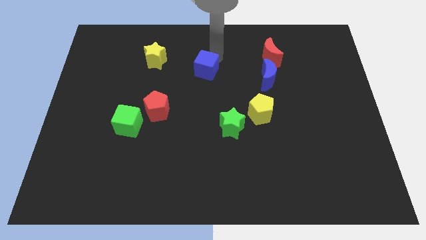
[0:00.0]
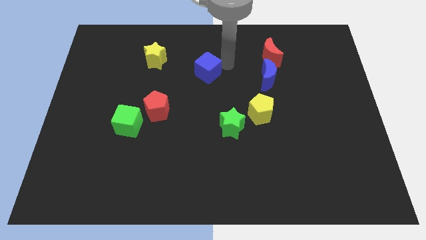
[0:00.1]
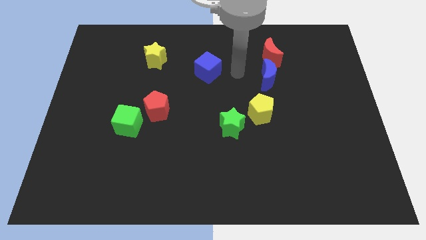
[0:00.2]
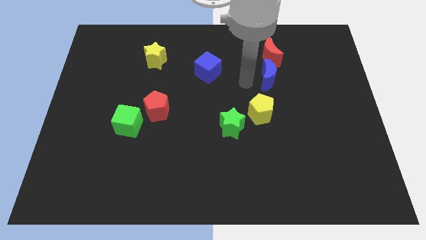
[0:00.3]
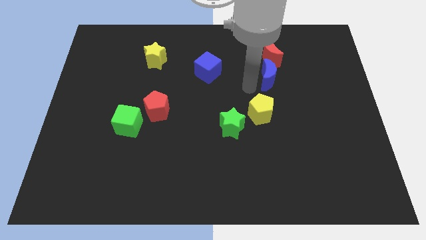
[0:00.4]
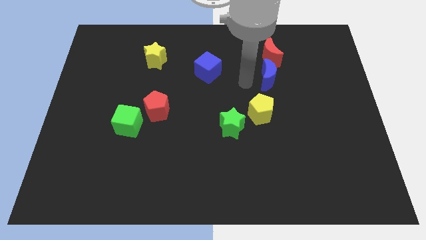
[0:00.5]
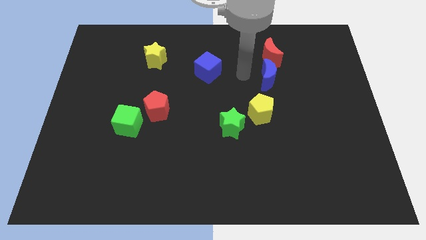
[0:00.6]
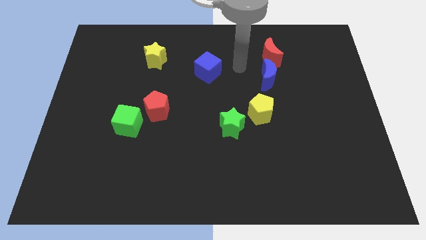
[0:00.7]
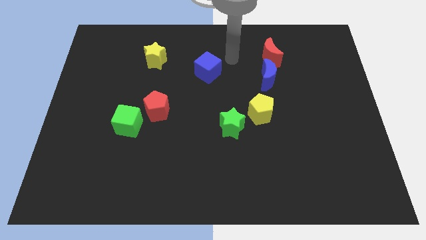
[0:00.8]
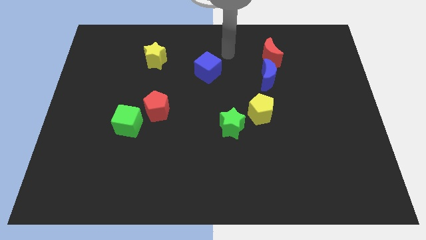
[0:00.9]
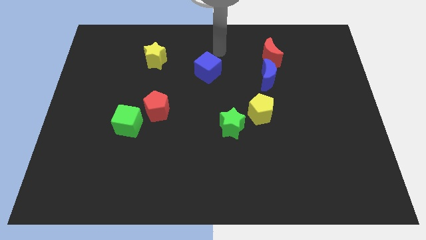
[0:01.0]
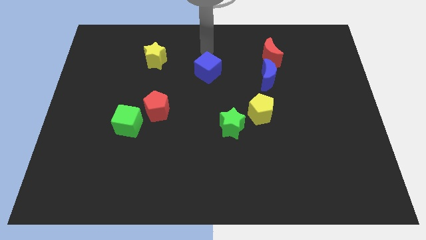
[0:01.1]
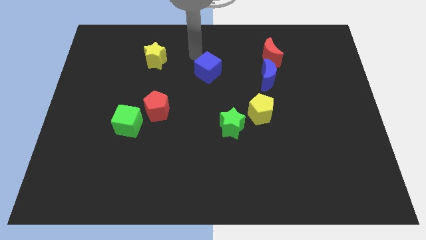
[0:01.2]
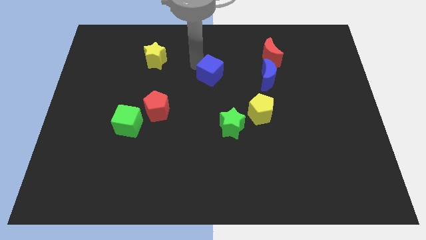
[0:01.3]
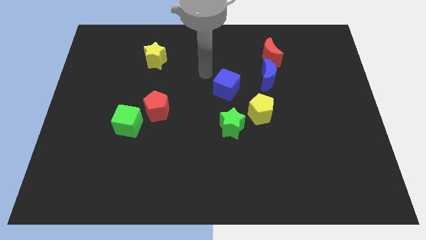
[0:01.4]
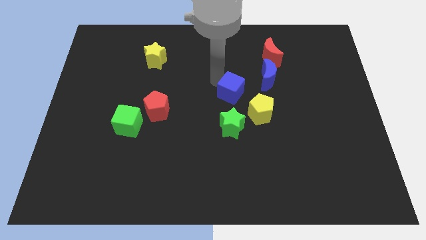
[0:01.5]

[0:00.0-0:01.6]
move the blue cube above the green star

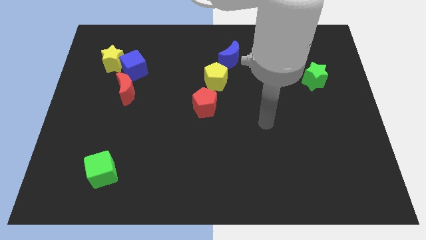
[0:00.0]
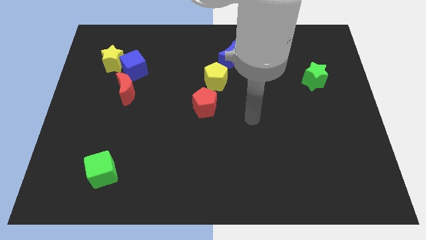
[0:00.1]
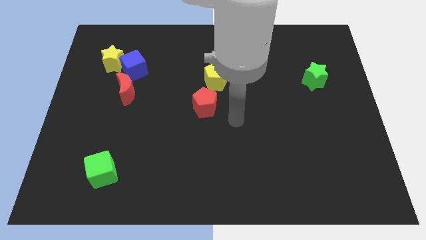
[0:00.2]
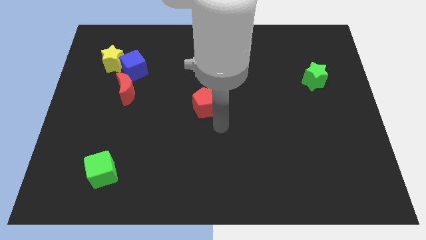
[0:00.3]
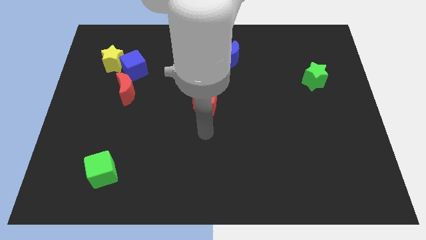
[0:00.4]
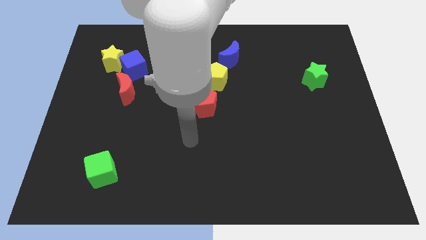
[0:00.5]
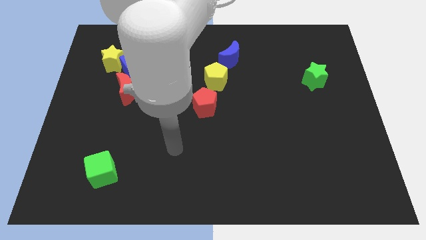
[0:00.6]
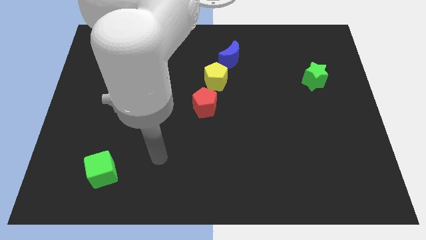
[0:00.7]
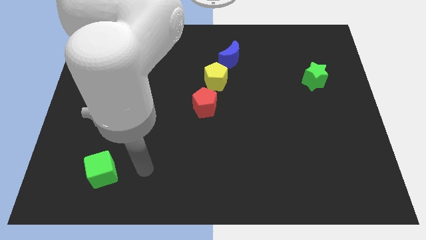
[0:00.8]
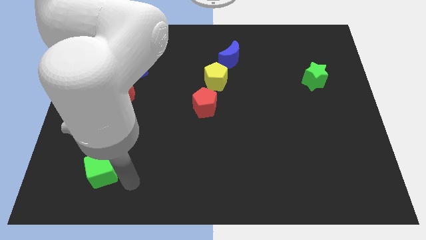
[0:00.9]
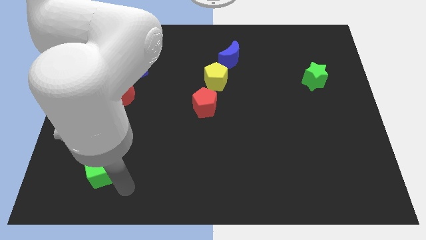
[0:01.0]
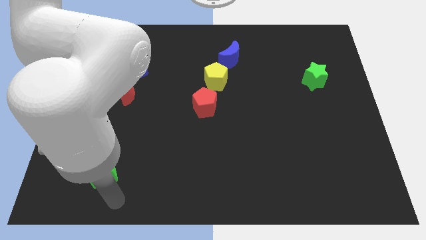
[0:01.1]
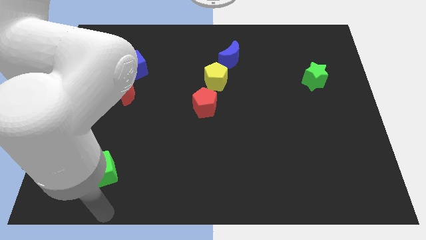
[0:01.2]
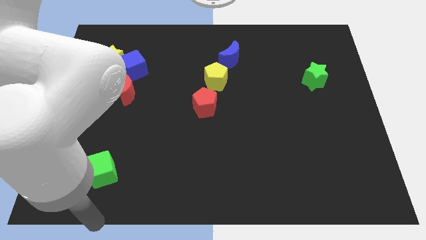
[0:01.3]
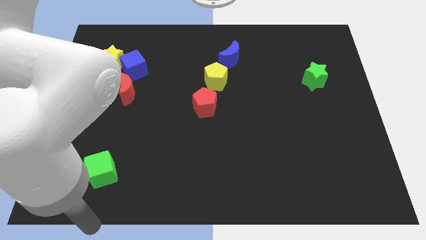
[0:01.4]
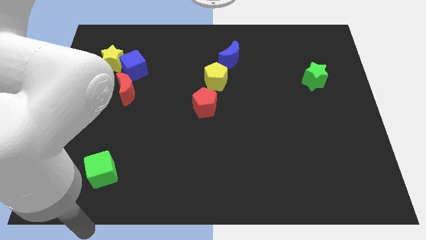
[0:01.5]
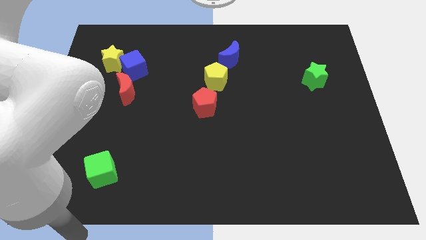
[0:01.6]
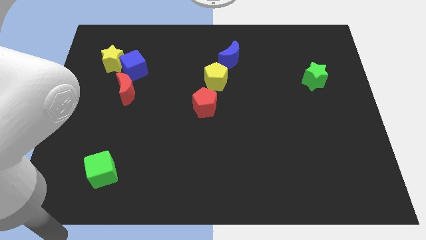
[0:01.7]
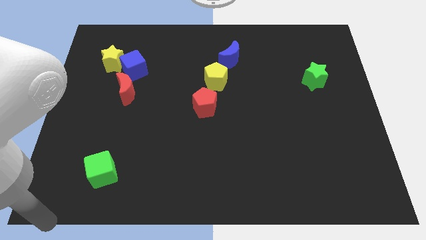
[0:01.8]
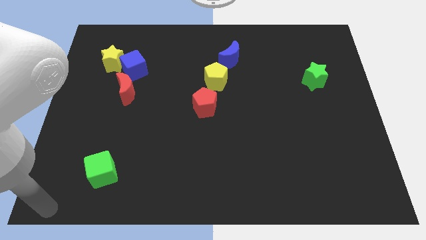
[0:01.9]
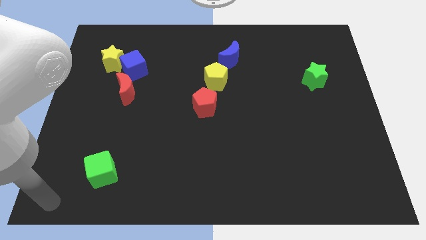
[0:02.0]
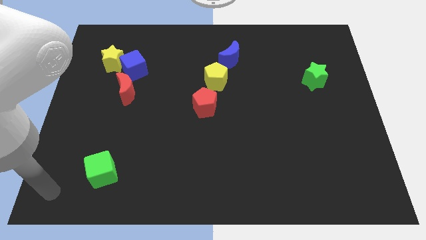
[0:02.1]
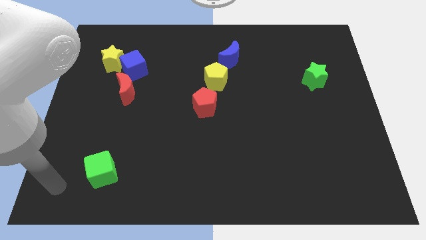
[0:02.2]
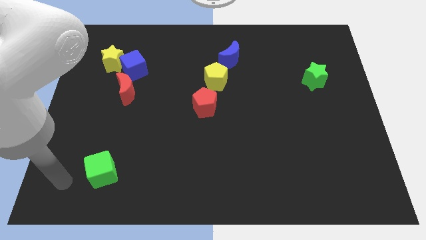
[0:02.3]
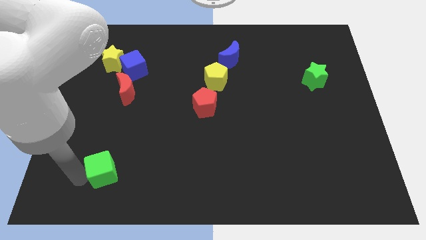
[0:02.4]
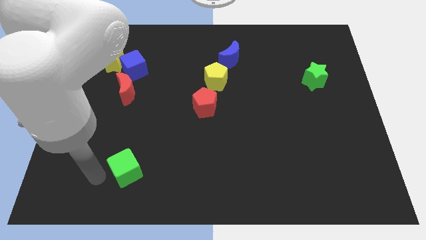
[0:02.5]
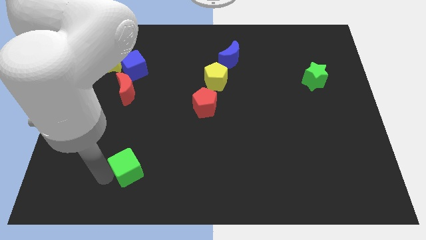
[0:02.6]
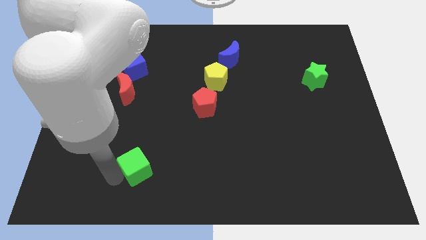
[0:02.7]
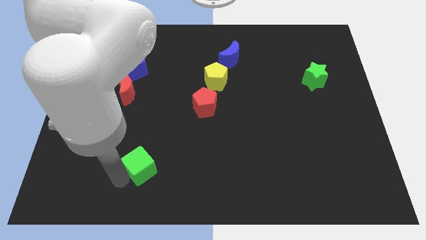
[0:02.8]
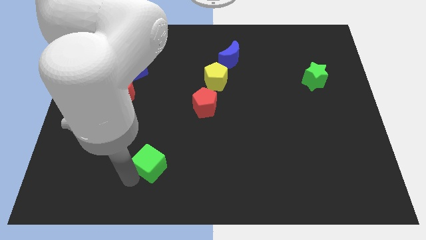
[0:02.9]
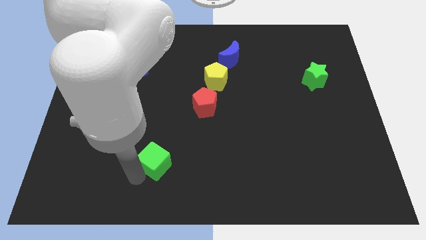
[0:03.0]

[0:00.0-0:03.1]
push the green cube to the right side of the board

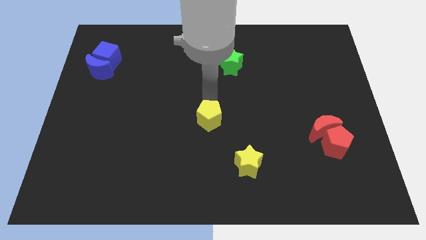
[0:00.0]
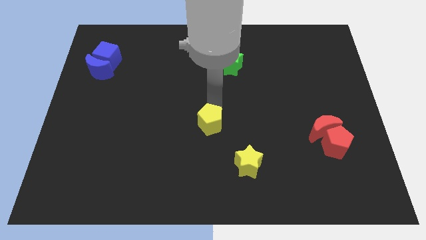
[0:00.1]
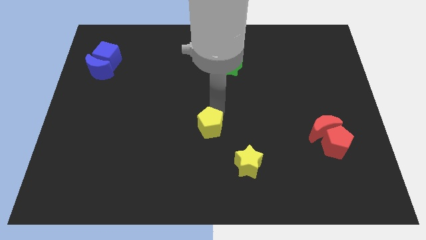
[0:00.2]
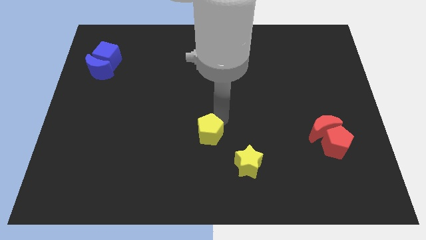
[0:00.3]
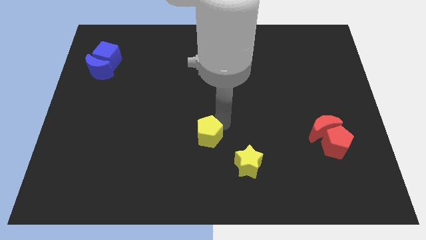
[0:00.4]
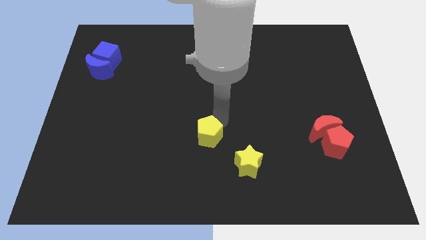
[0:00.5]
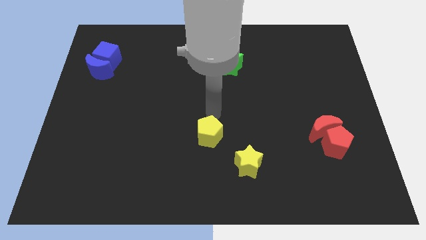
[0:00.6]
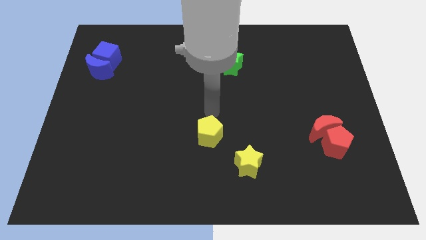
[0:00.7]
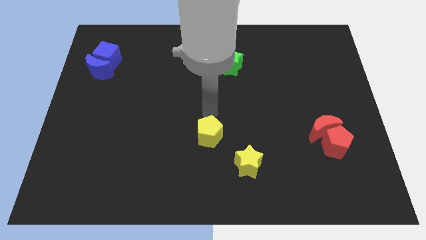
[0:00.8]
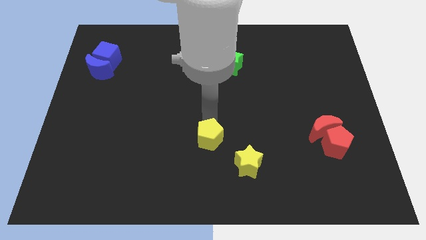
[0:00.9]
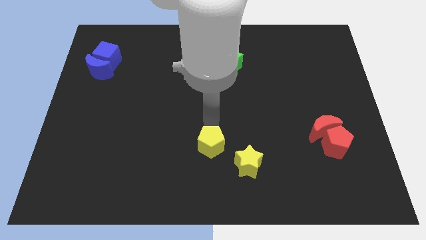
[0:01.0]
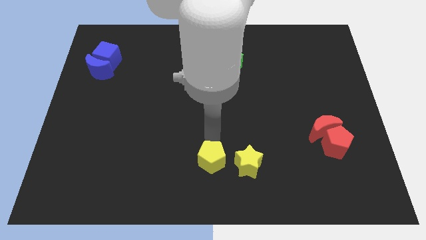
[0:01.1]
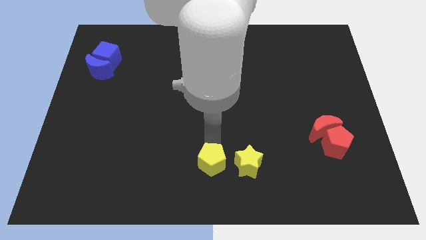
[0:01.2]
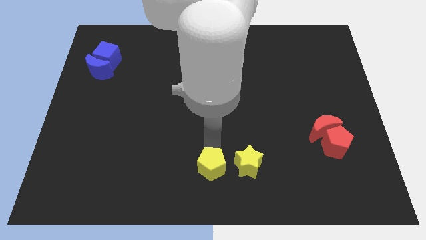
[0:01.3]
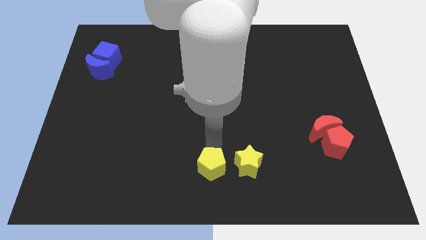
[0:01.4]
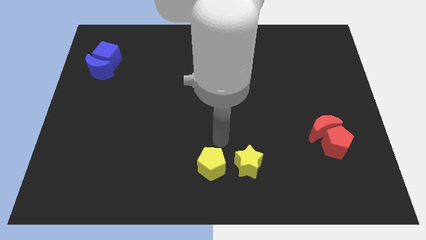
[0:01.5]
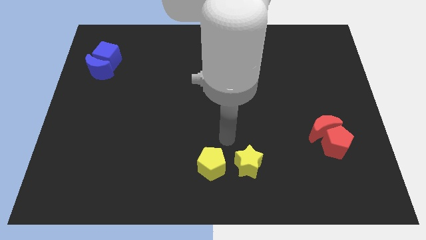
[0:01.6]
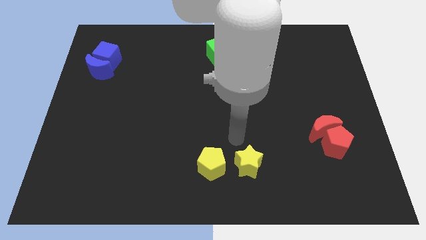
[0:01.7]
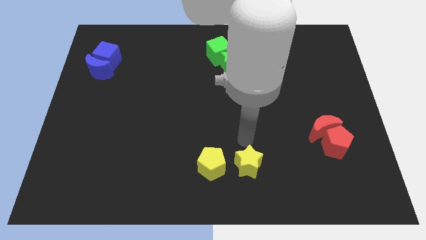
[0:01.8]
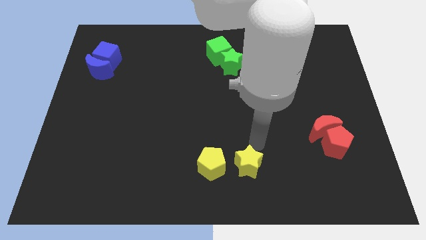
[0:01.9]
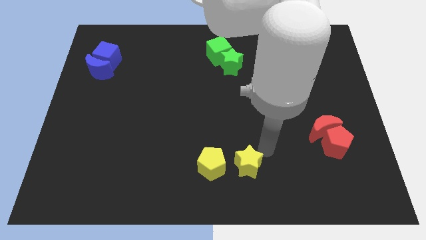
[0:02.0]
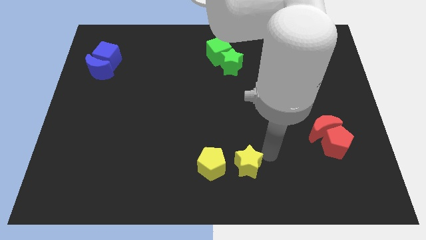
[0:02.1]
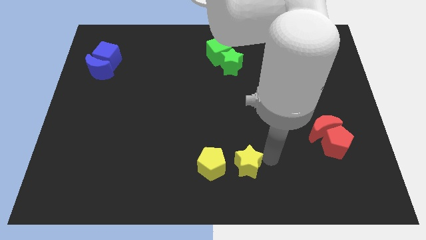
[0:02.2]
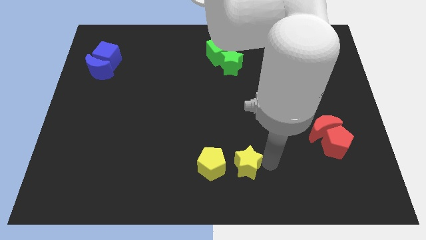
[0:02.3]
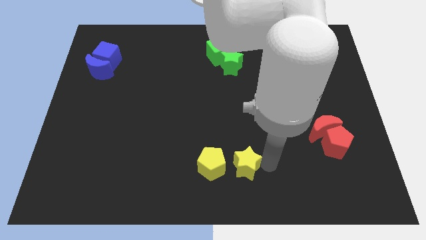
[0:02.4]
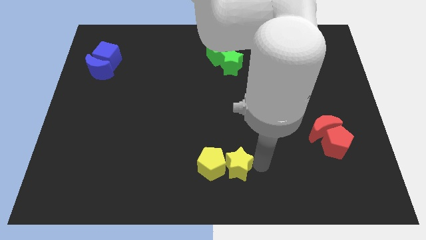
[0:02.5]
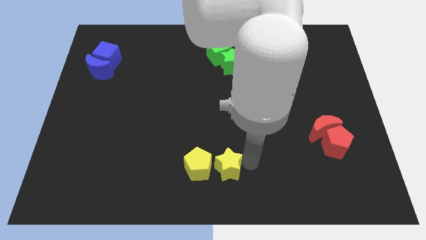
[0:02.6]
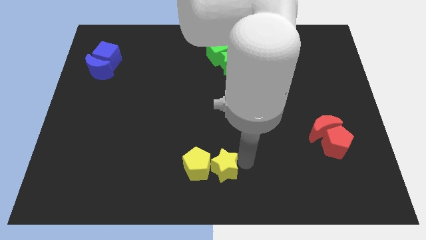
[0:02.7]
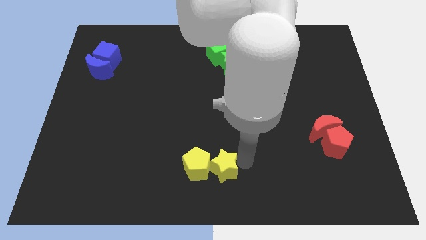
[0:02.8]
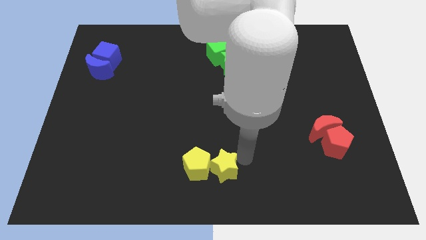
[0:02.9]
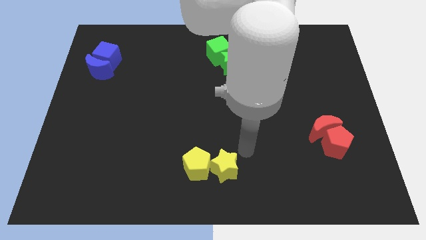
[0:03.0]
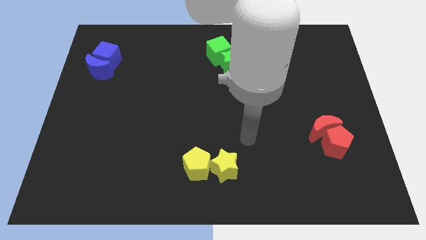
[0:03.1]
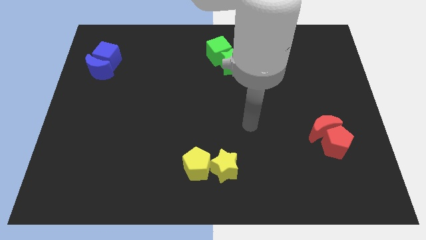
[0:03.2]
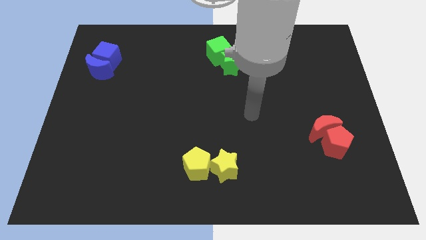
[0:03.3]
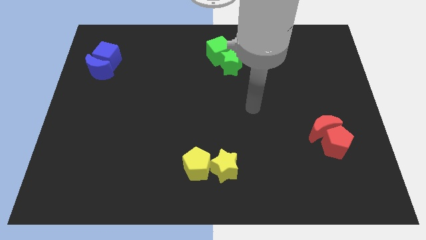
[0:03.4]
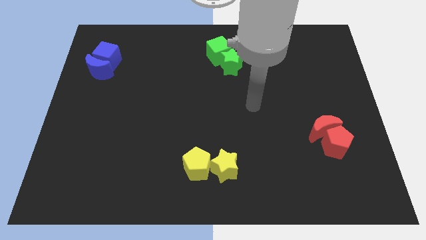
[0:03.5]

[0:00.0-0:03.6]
move the yellow star to the right of yellow pentagon

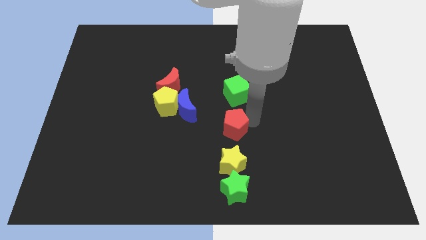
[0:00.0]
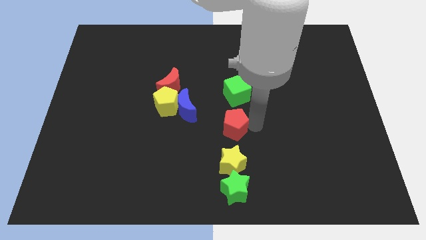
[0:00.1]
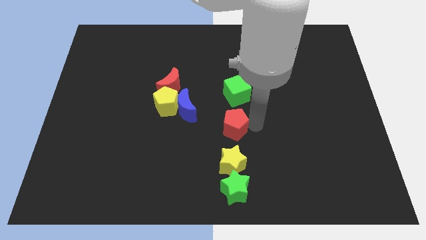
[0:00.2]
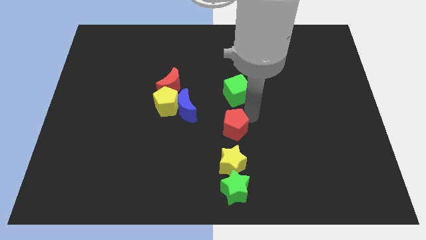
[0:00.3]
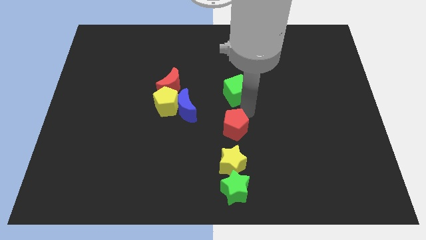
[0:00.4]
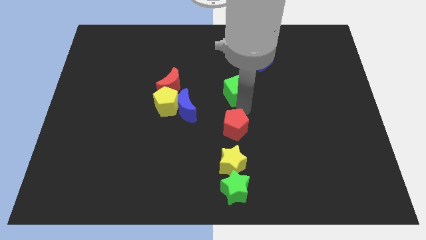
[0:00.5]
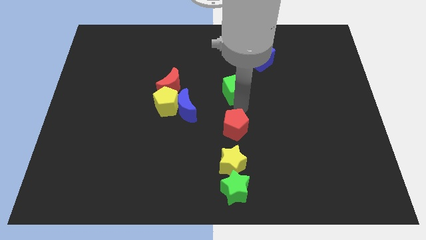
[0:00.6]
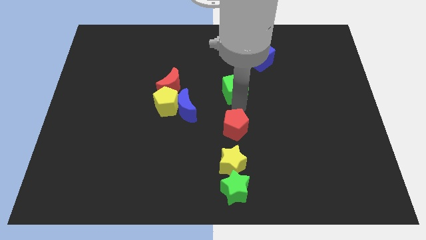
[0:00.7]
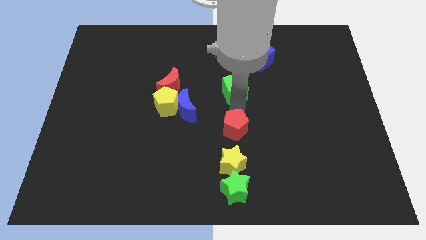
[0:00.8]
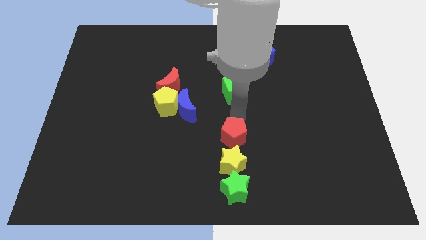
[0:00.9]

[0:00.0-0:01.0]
point your arm between green cube and red pentagon
